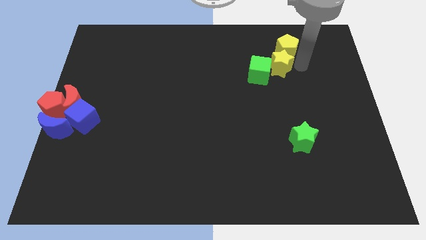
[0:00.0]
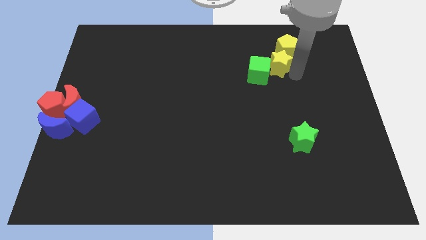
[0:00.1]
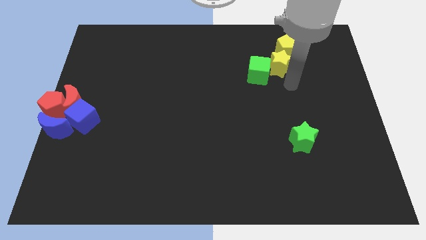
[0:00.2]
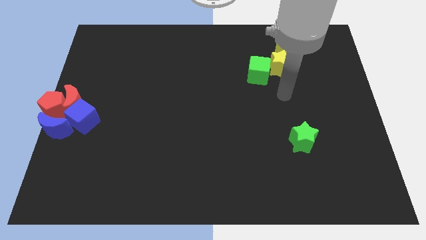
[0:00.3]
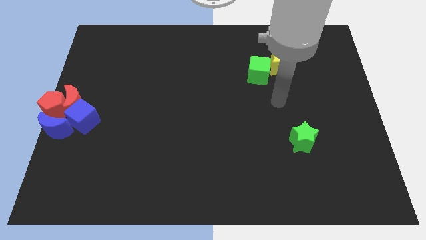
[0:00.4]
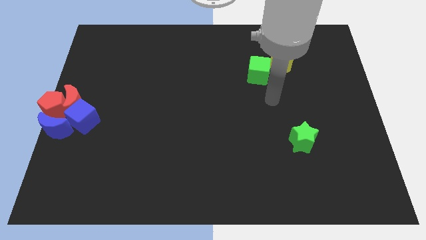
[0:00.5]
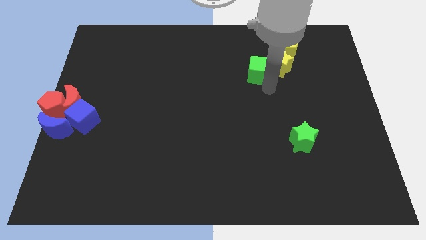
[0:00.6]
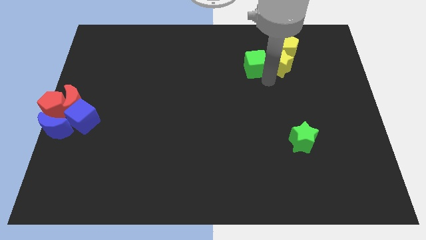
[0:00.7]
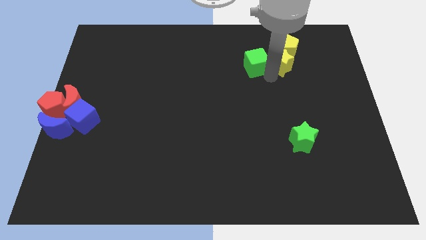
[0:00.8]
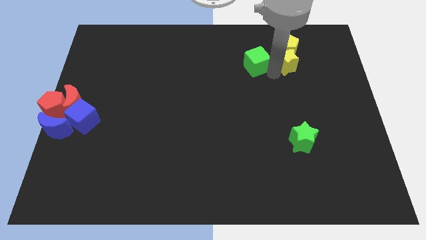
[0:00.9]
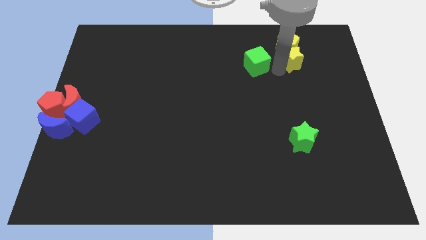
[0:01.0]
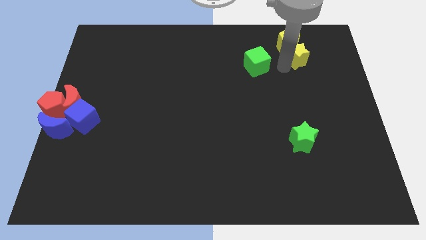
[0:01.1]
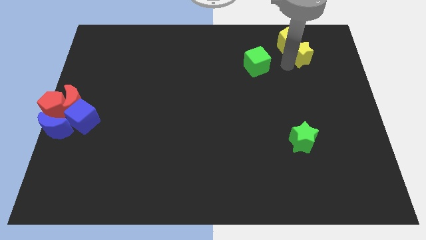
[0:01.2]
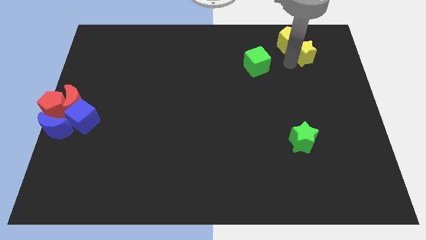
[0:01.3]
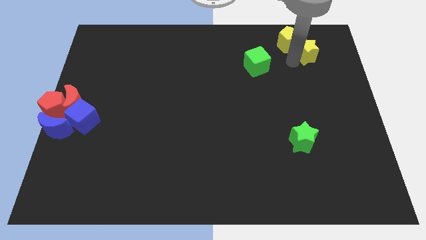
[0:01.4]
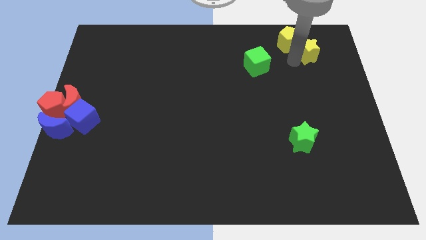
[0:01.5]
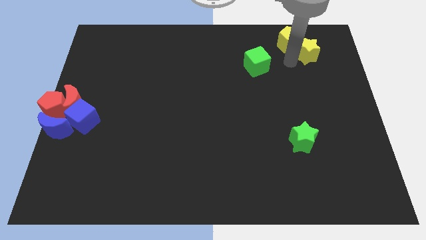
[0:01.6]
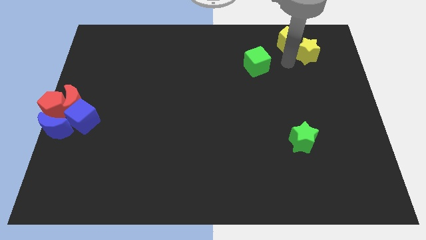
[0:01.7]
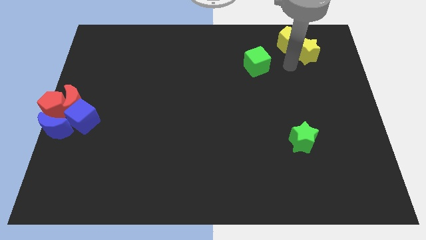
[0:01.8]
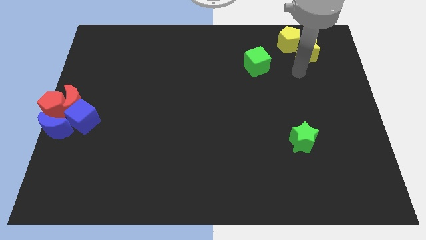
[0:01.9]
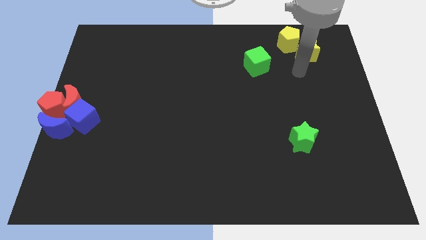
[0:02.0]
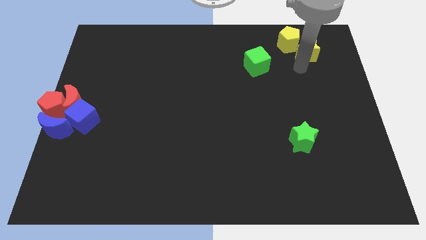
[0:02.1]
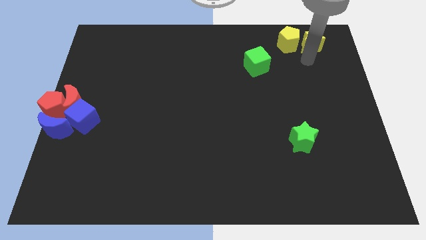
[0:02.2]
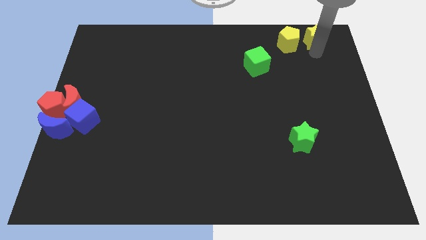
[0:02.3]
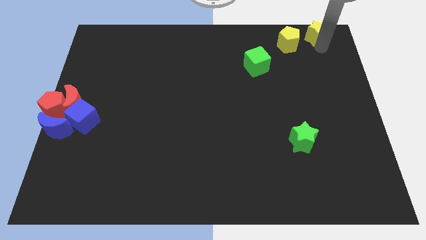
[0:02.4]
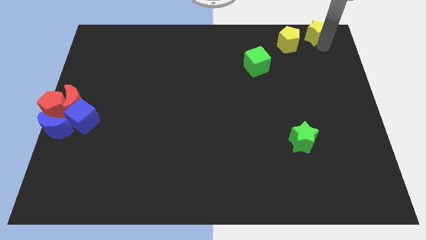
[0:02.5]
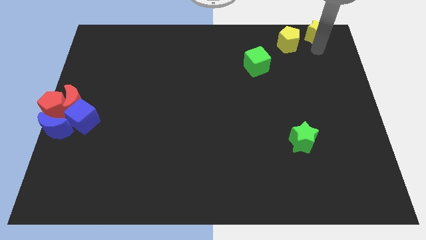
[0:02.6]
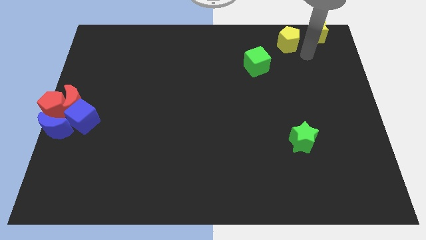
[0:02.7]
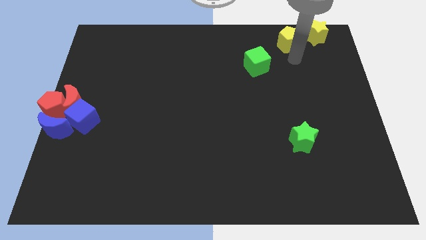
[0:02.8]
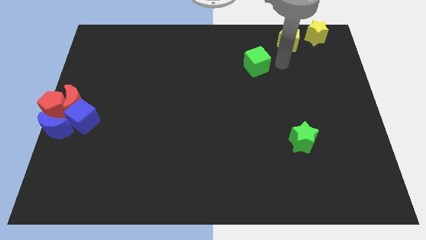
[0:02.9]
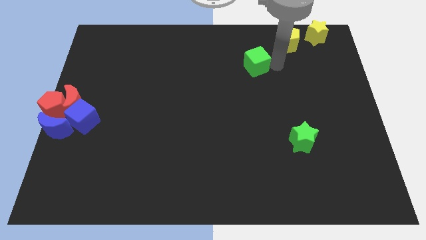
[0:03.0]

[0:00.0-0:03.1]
move yellow star to the top right of the board

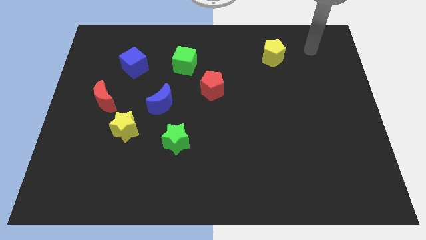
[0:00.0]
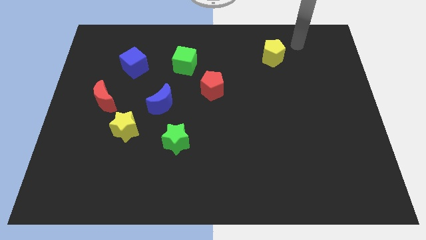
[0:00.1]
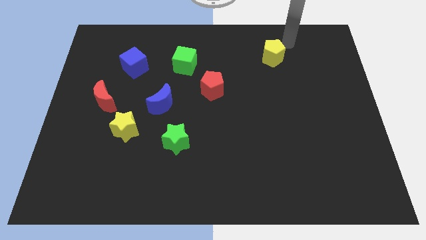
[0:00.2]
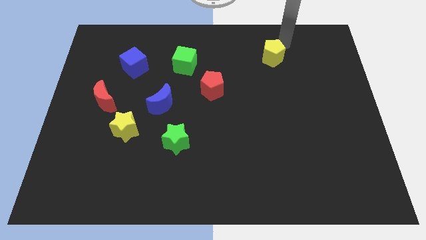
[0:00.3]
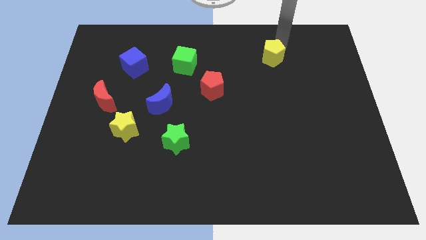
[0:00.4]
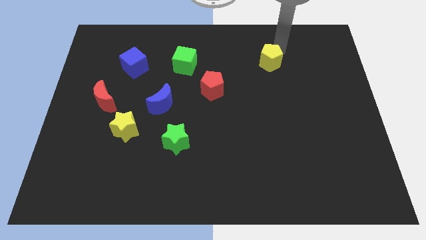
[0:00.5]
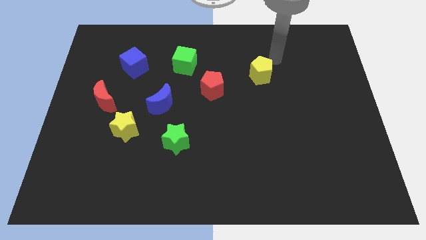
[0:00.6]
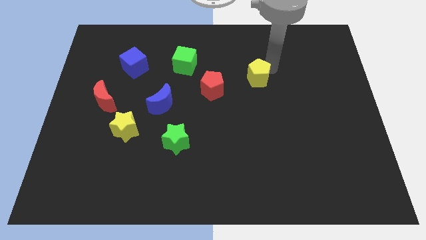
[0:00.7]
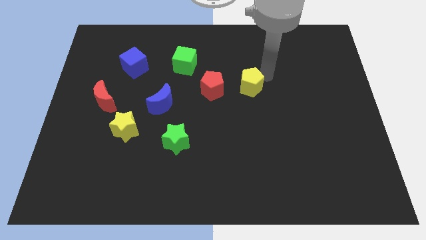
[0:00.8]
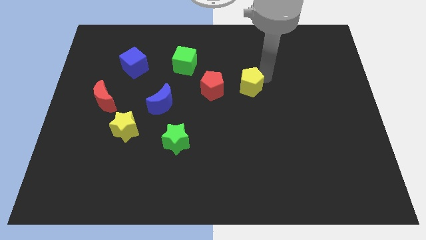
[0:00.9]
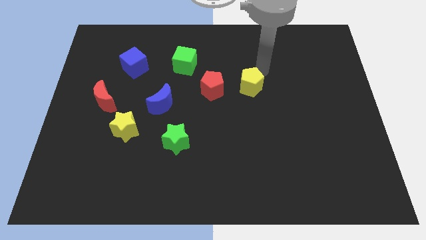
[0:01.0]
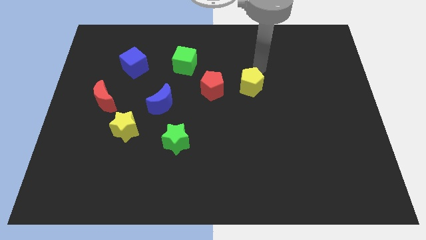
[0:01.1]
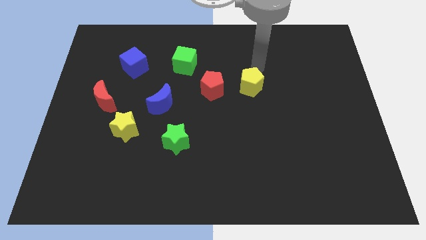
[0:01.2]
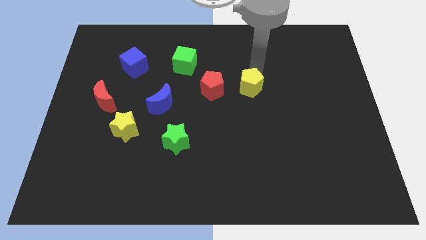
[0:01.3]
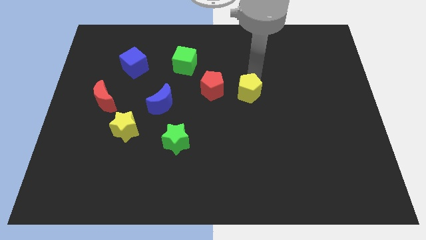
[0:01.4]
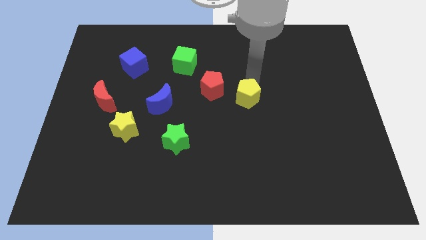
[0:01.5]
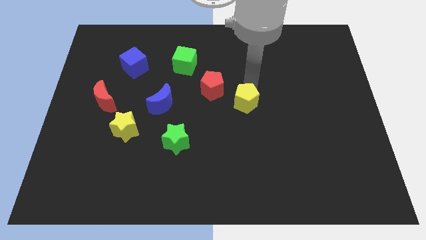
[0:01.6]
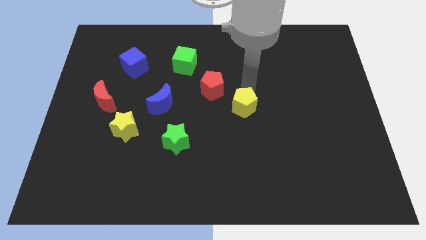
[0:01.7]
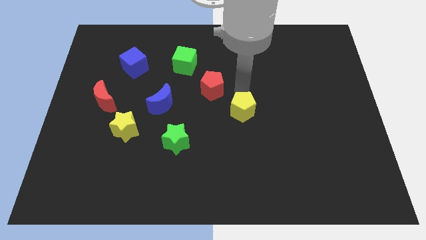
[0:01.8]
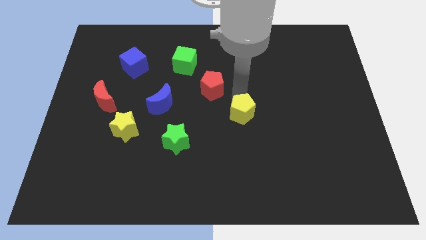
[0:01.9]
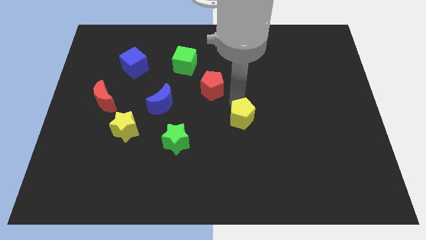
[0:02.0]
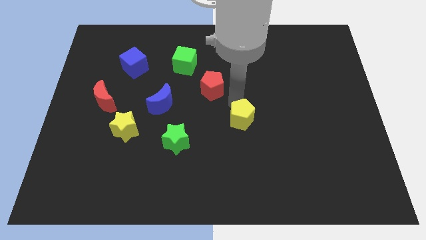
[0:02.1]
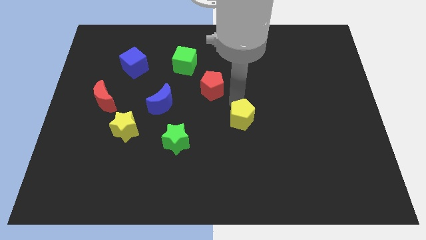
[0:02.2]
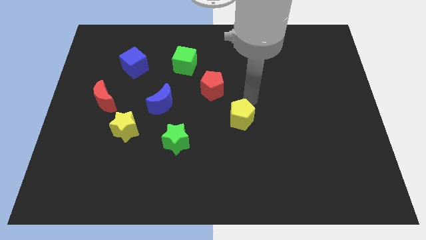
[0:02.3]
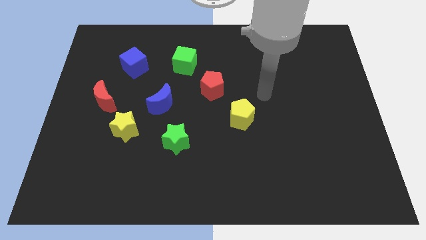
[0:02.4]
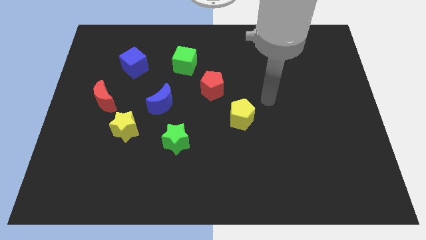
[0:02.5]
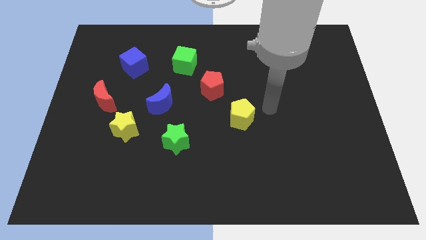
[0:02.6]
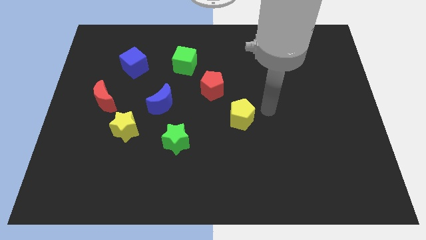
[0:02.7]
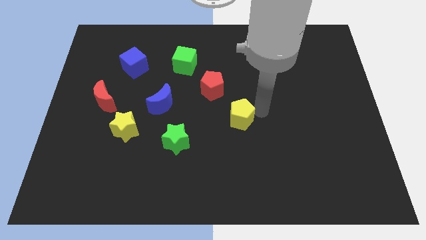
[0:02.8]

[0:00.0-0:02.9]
move the yellow pentagon diagonally to the red pentagon

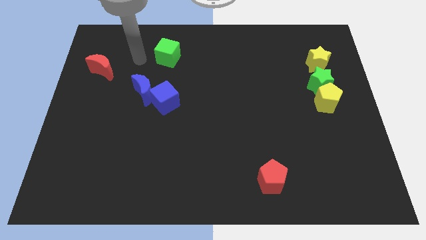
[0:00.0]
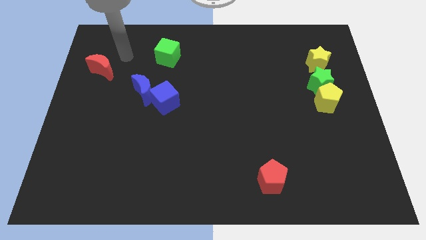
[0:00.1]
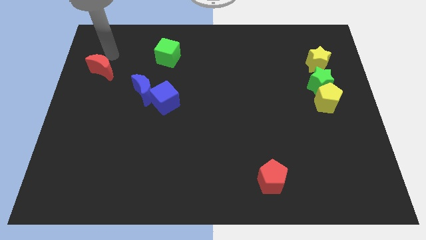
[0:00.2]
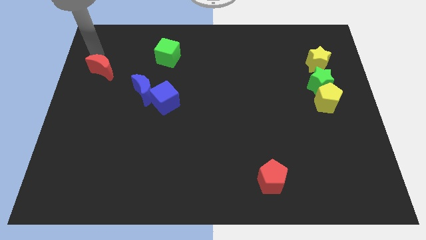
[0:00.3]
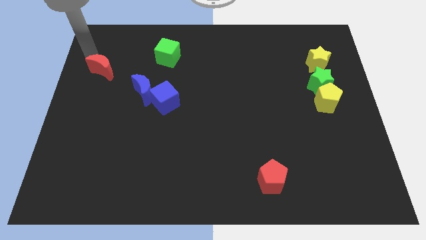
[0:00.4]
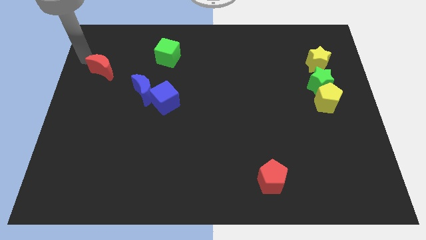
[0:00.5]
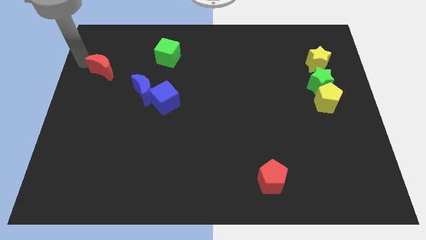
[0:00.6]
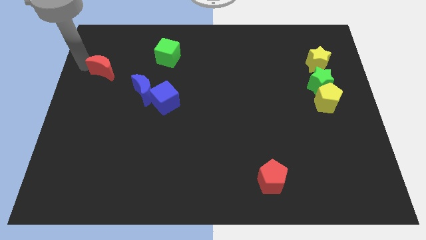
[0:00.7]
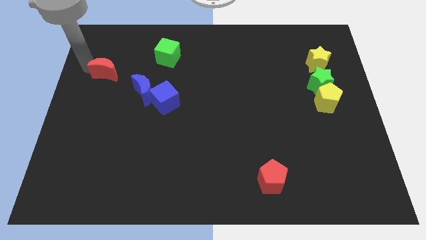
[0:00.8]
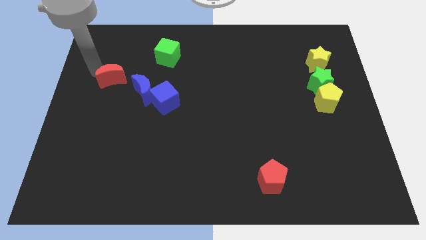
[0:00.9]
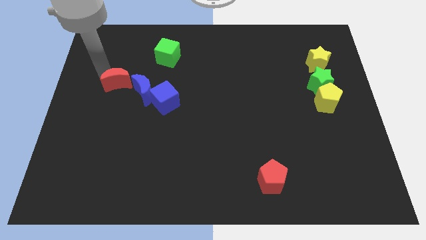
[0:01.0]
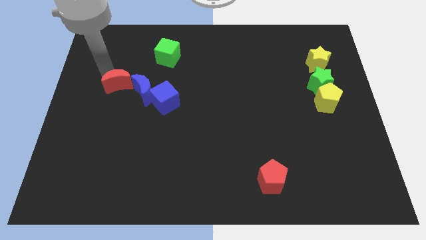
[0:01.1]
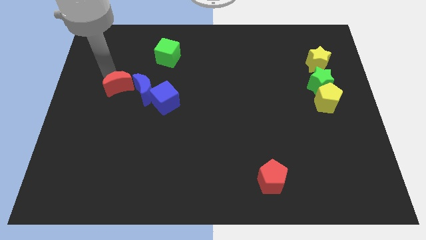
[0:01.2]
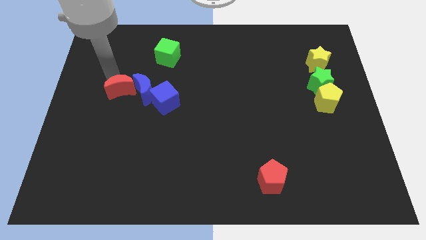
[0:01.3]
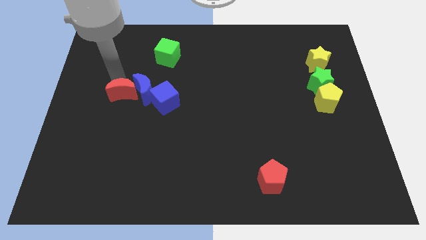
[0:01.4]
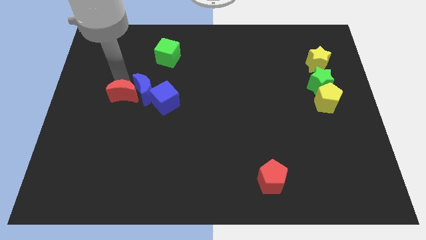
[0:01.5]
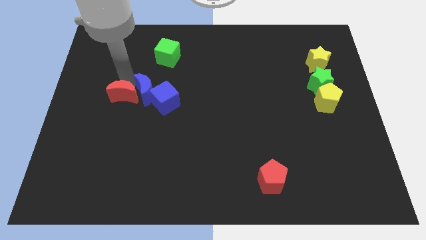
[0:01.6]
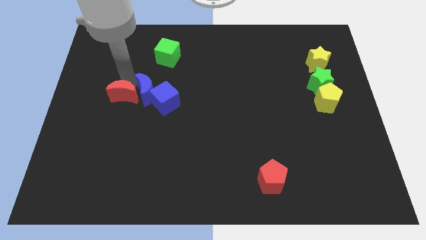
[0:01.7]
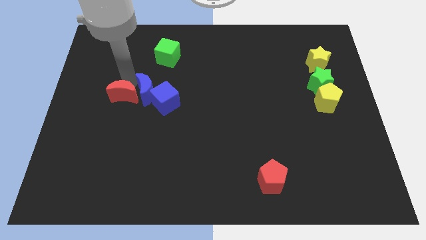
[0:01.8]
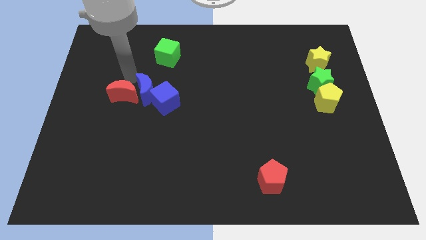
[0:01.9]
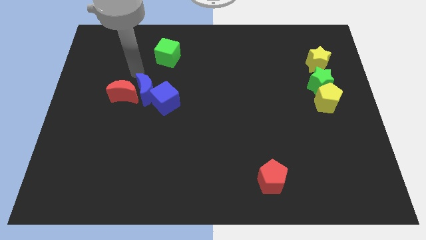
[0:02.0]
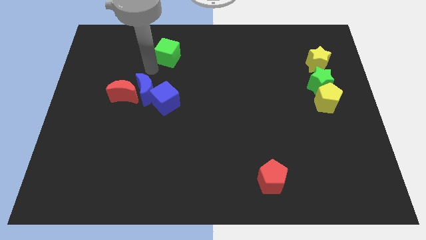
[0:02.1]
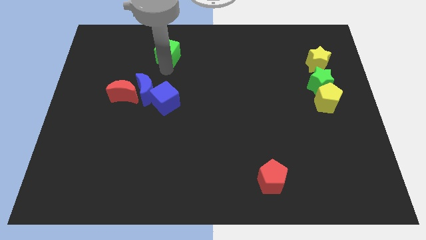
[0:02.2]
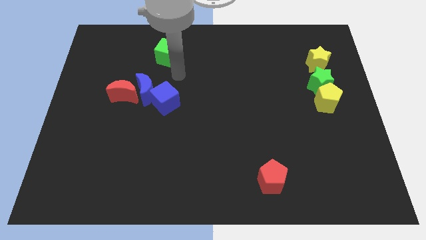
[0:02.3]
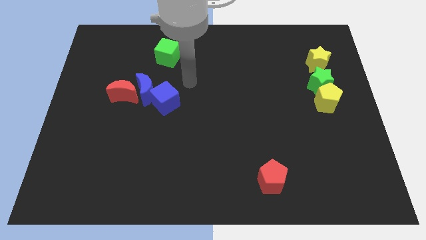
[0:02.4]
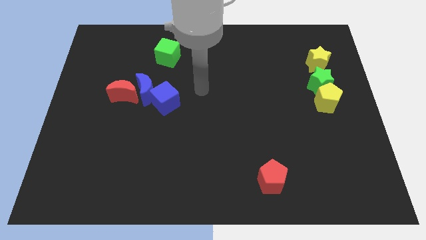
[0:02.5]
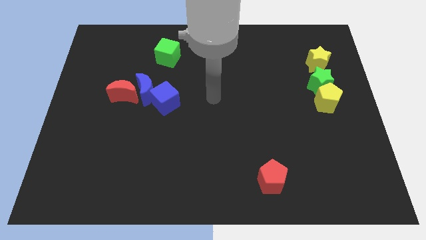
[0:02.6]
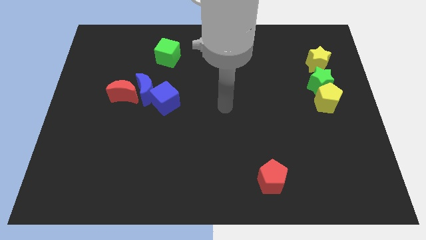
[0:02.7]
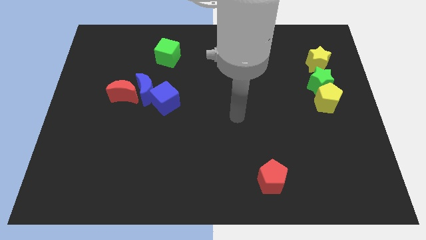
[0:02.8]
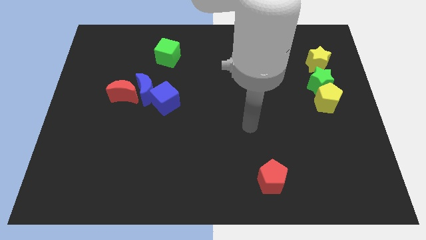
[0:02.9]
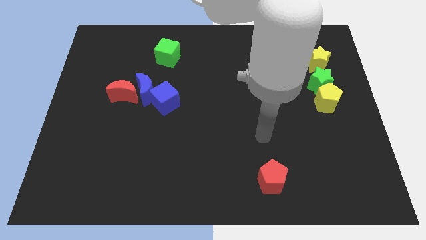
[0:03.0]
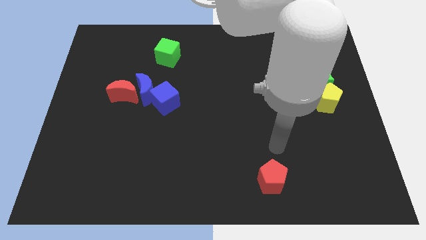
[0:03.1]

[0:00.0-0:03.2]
place the red moon at the bottom left side of the blue moon
